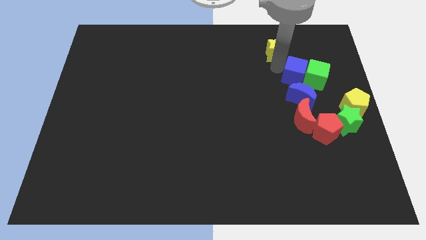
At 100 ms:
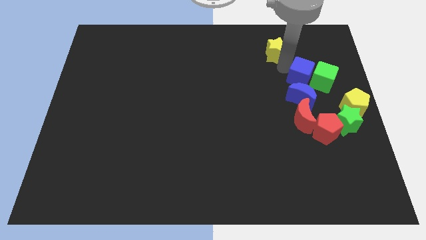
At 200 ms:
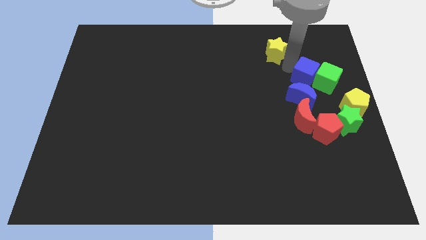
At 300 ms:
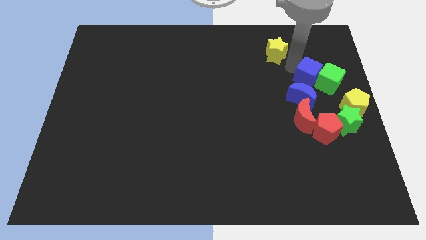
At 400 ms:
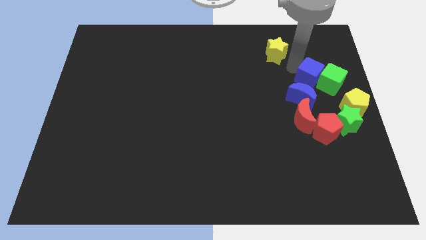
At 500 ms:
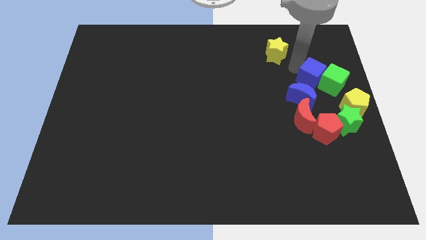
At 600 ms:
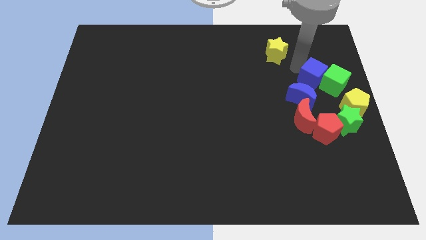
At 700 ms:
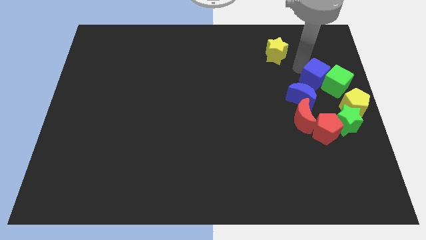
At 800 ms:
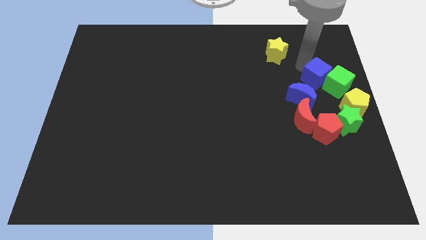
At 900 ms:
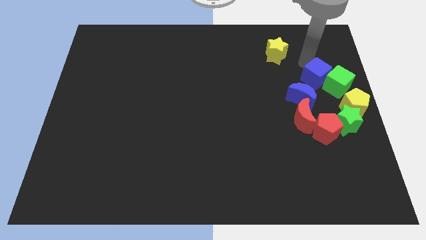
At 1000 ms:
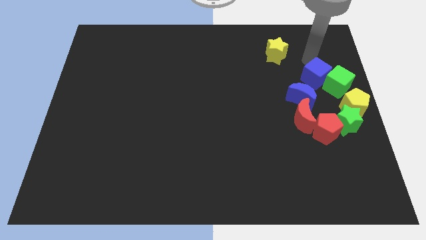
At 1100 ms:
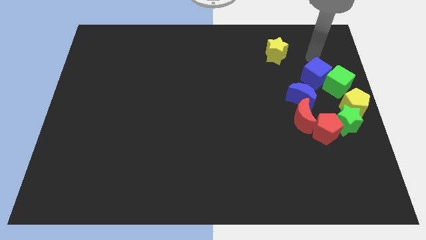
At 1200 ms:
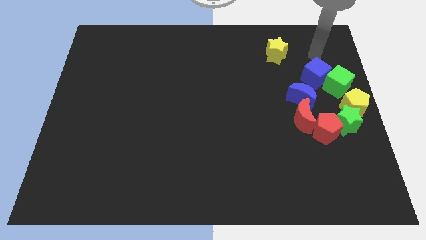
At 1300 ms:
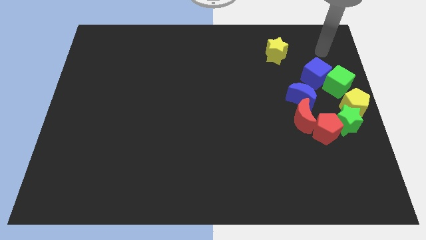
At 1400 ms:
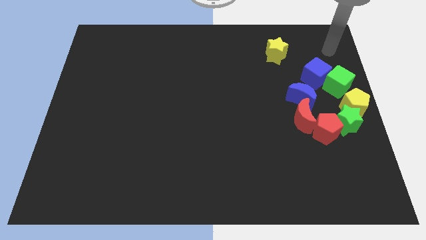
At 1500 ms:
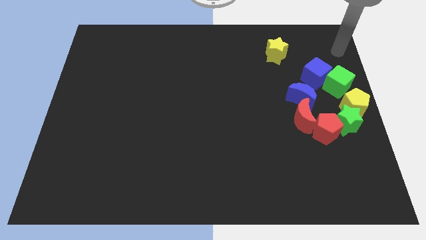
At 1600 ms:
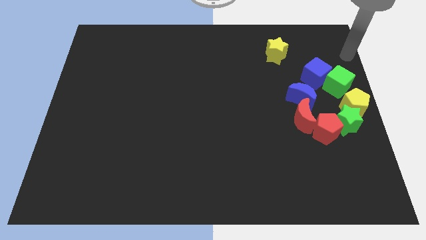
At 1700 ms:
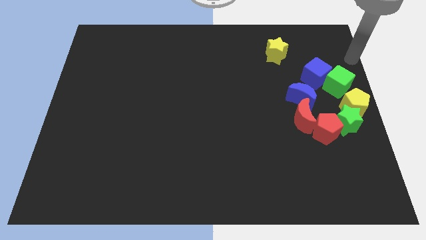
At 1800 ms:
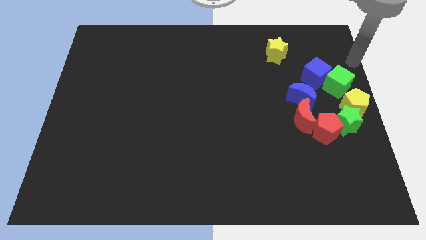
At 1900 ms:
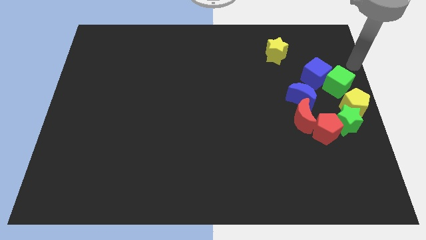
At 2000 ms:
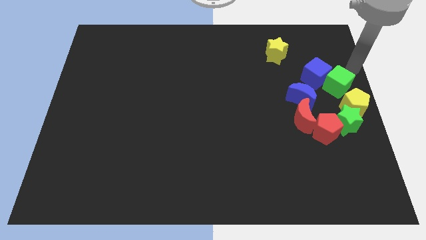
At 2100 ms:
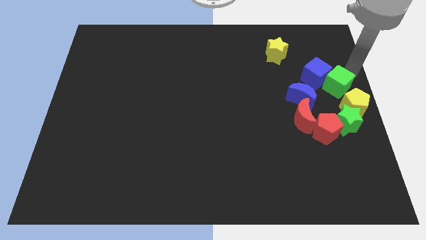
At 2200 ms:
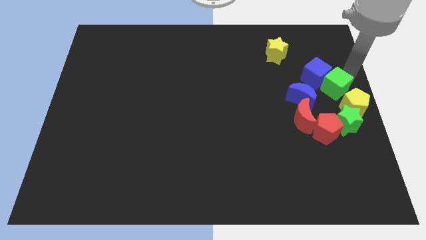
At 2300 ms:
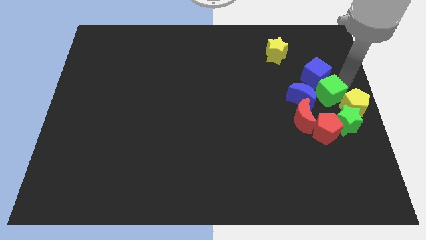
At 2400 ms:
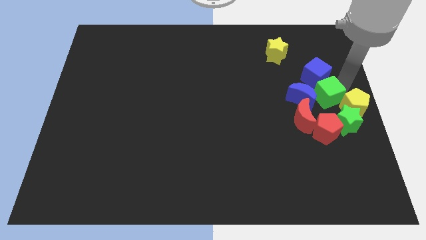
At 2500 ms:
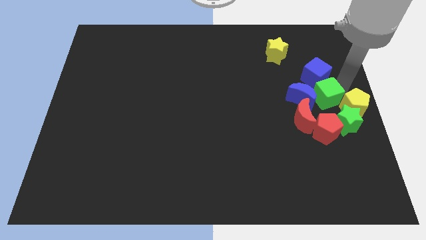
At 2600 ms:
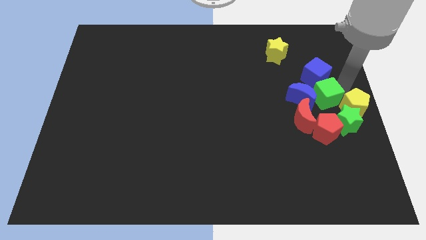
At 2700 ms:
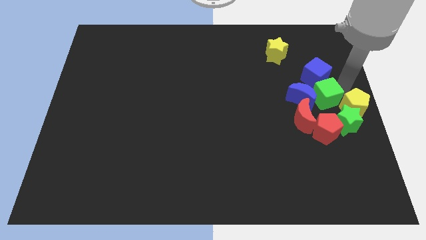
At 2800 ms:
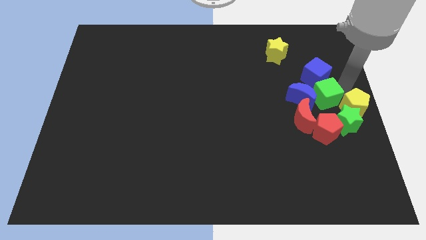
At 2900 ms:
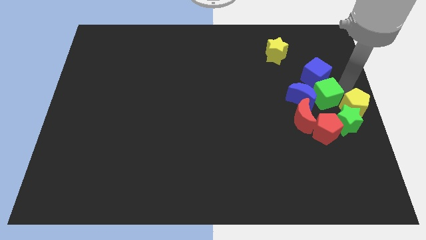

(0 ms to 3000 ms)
move the green cube right to the blue moon

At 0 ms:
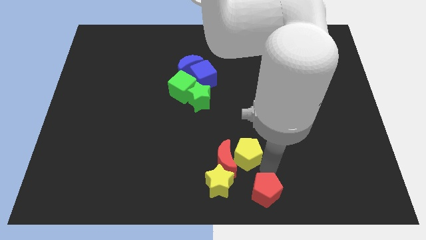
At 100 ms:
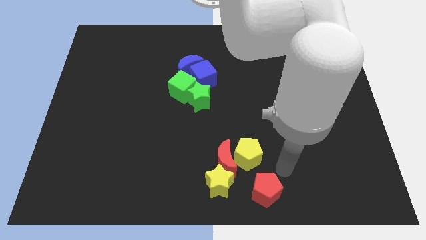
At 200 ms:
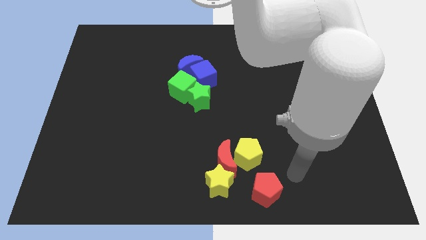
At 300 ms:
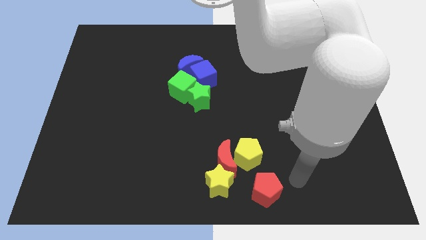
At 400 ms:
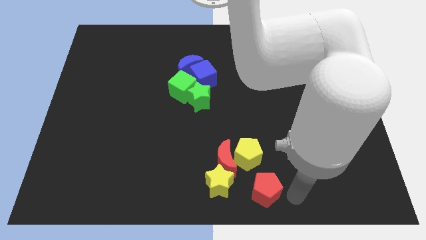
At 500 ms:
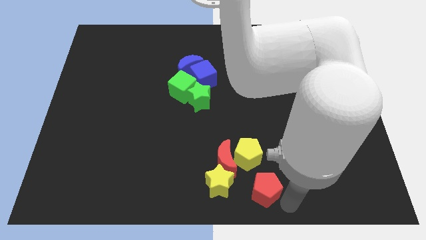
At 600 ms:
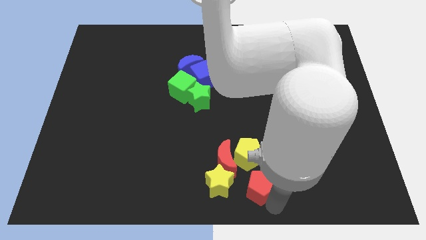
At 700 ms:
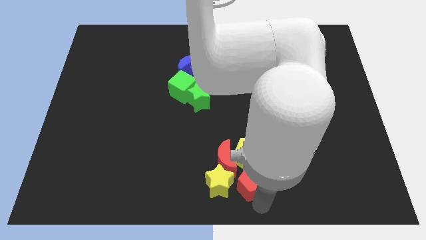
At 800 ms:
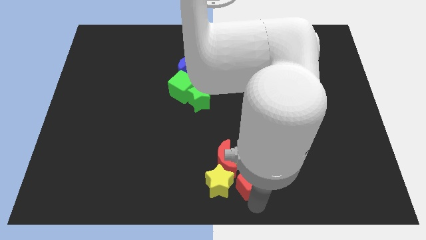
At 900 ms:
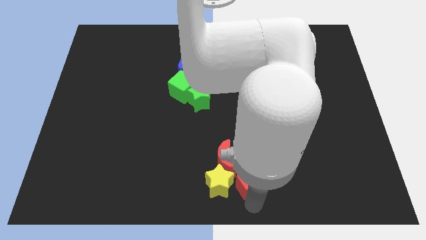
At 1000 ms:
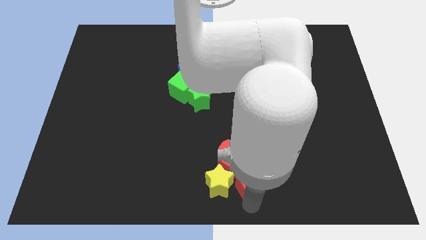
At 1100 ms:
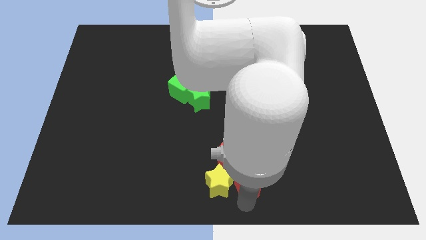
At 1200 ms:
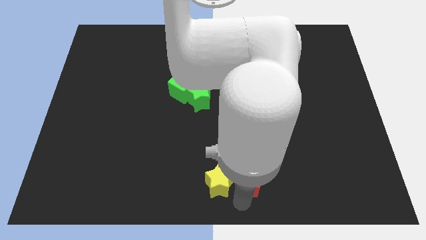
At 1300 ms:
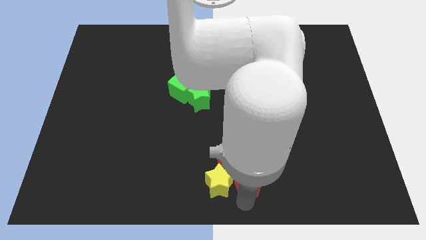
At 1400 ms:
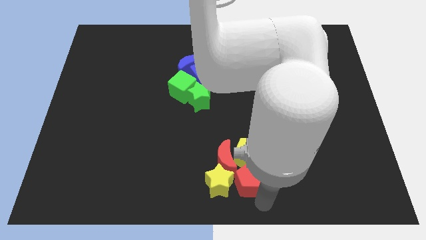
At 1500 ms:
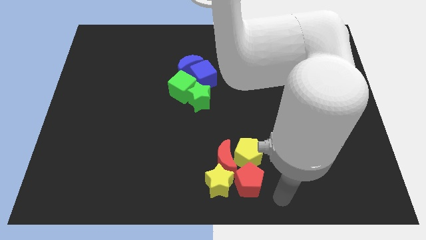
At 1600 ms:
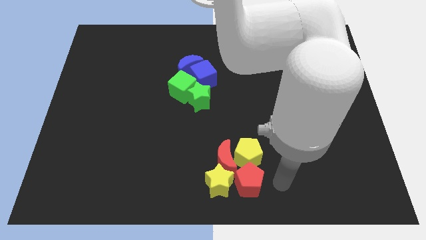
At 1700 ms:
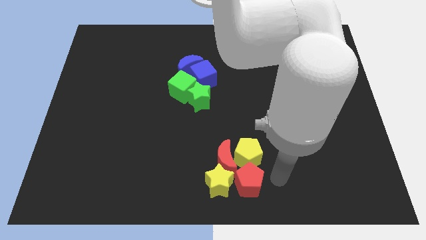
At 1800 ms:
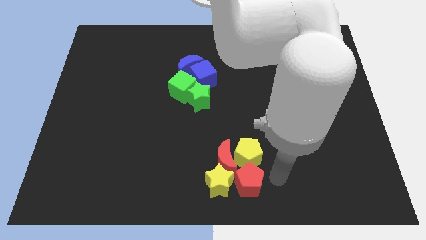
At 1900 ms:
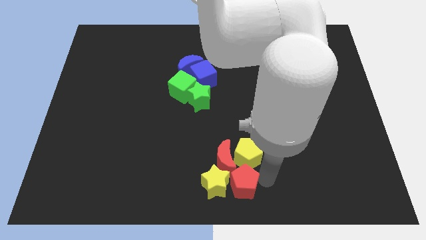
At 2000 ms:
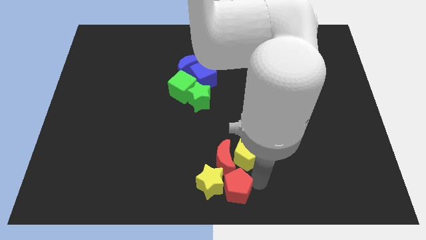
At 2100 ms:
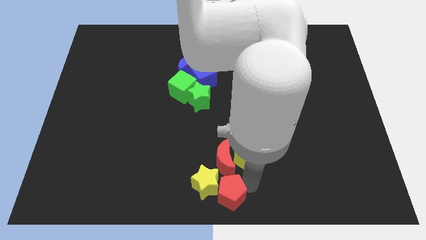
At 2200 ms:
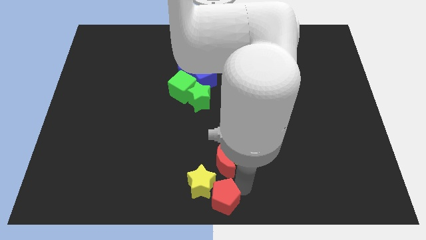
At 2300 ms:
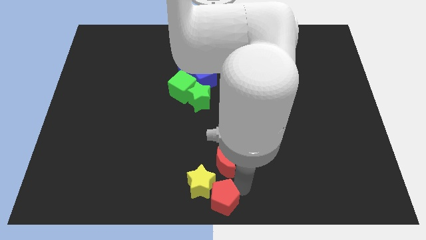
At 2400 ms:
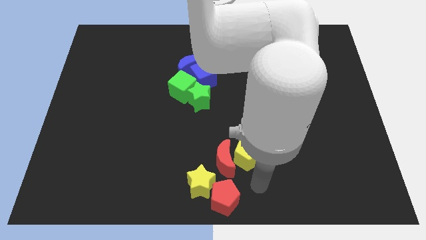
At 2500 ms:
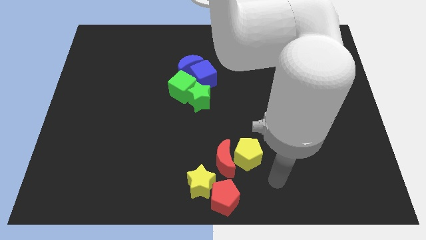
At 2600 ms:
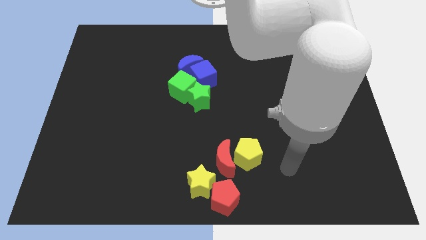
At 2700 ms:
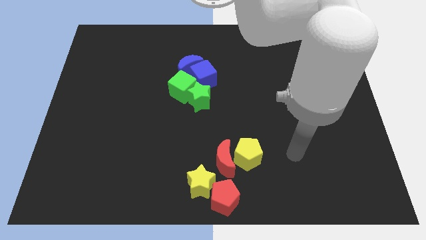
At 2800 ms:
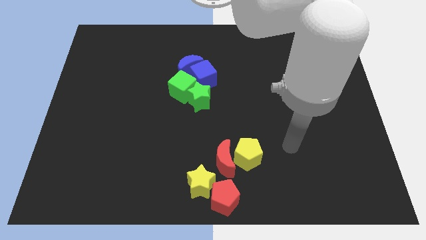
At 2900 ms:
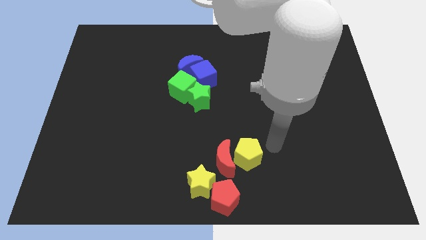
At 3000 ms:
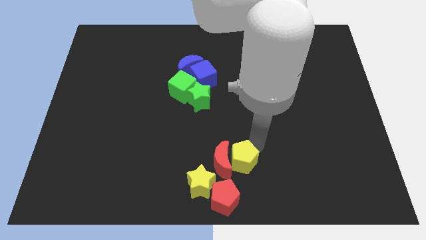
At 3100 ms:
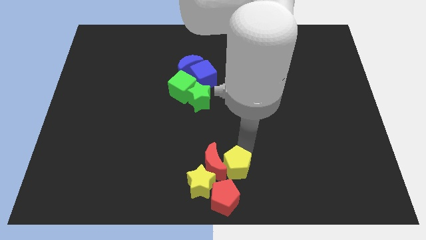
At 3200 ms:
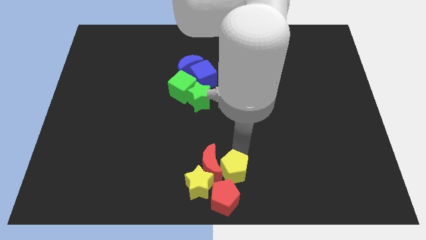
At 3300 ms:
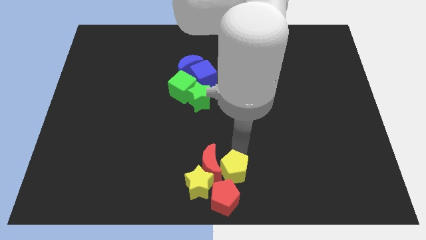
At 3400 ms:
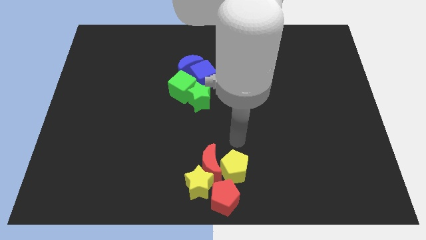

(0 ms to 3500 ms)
place the group of yellow and red blocks at the bottom center of the board

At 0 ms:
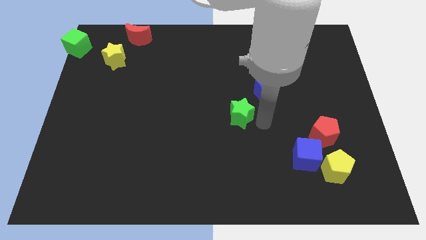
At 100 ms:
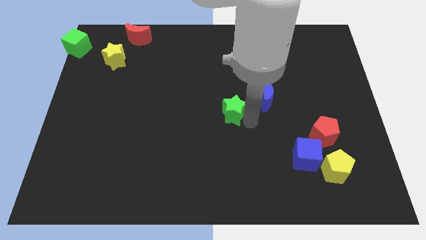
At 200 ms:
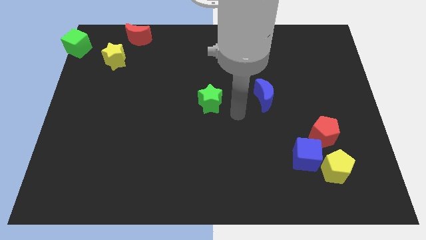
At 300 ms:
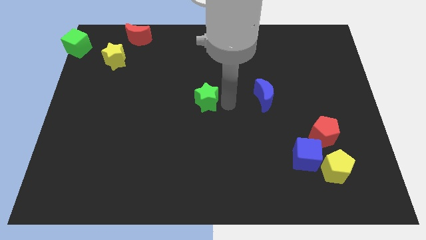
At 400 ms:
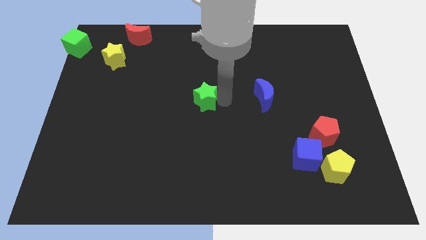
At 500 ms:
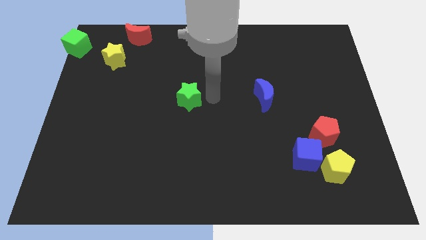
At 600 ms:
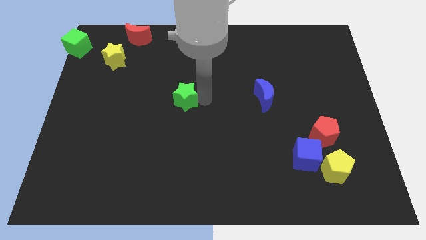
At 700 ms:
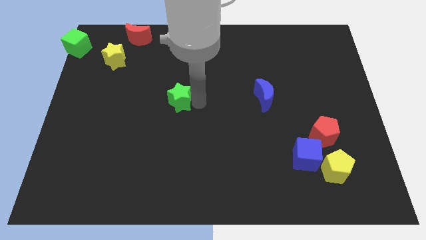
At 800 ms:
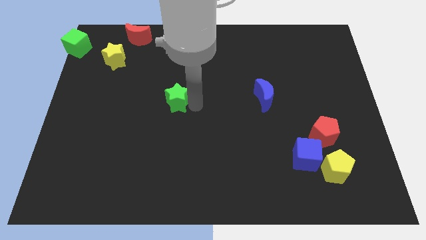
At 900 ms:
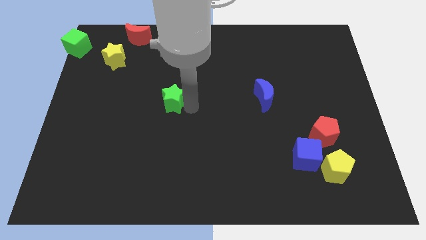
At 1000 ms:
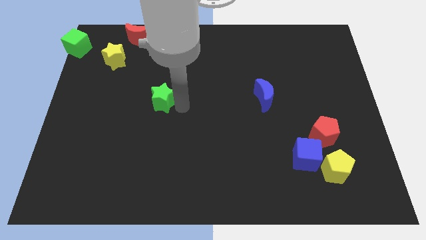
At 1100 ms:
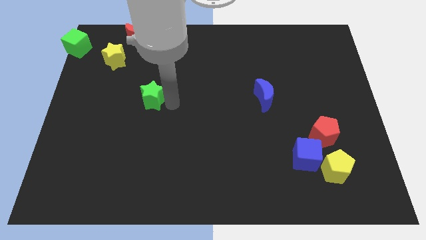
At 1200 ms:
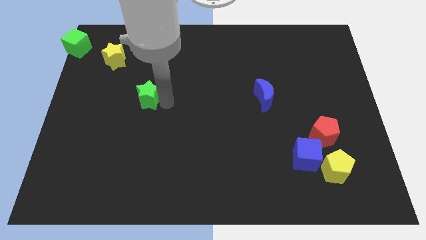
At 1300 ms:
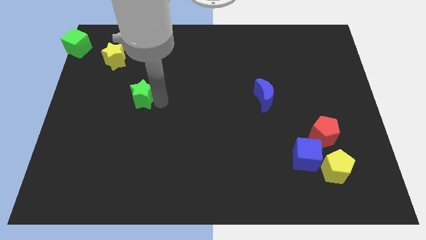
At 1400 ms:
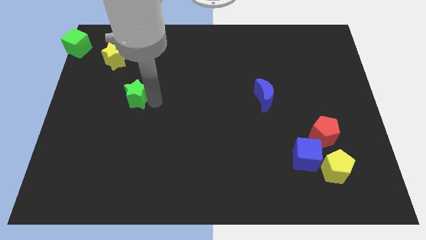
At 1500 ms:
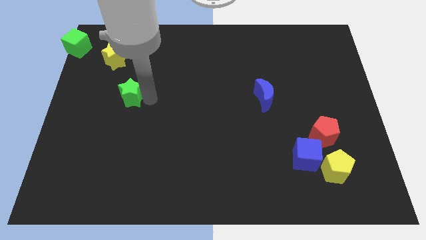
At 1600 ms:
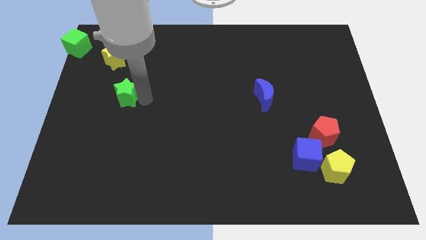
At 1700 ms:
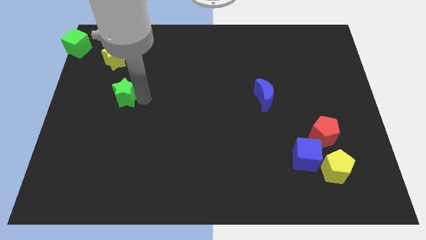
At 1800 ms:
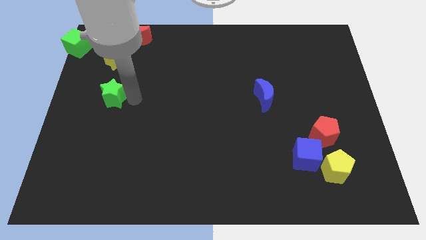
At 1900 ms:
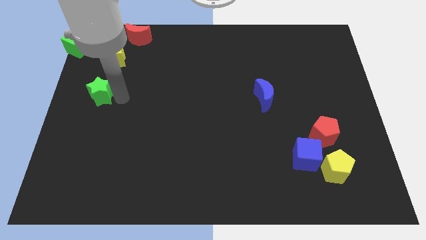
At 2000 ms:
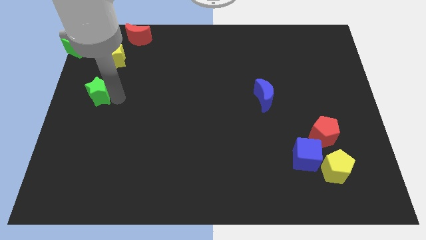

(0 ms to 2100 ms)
place green star below yellow star

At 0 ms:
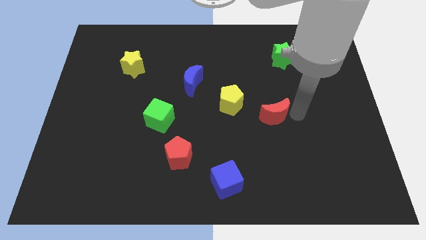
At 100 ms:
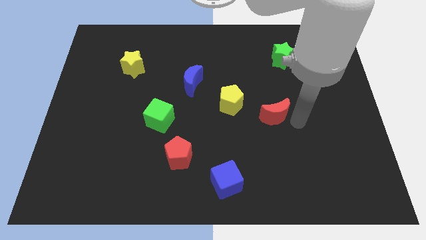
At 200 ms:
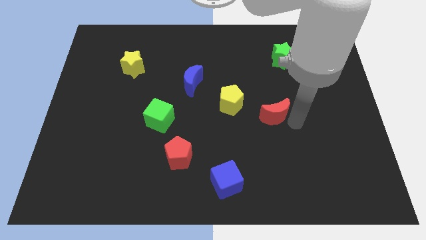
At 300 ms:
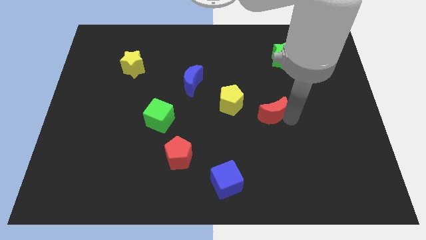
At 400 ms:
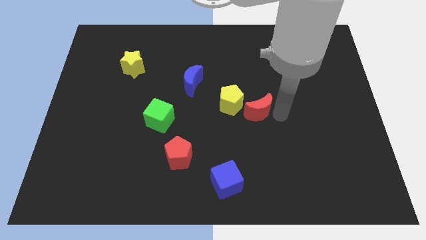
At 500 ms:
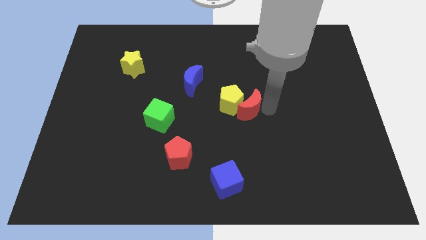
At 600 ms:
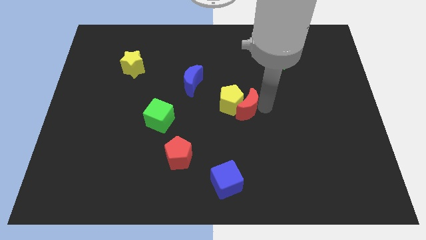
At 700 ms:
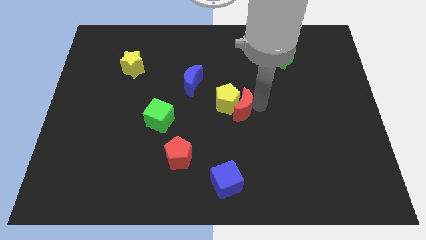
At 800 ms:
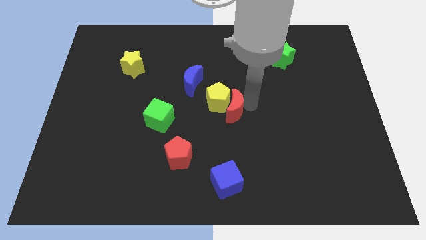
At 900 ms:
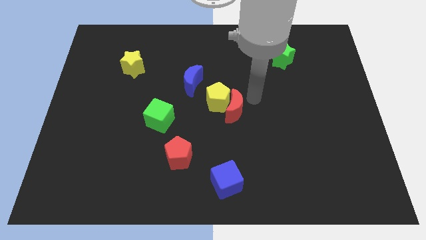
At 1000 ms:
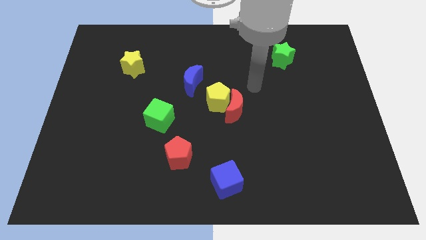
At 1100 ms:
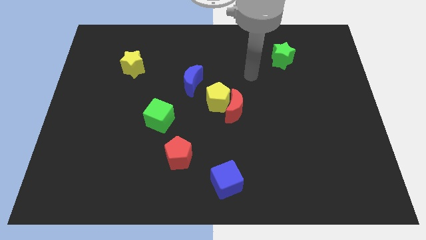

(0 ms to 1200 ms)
push the red moon into yellow pentagon
